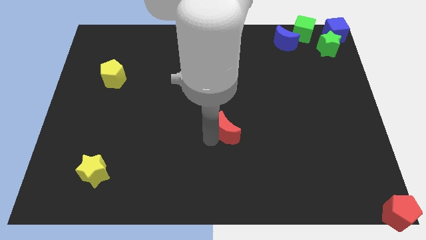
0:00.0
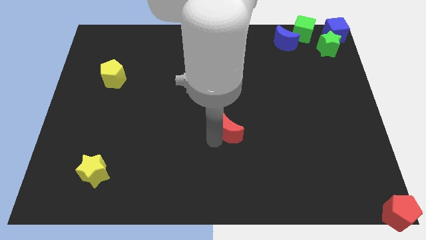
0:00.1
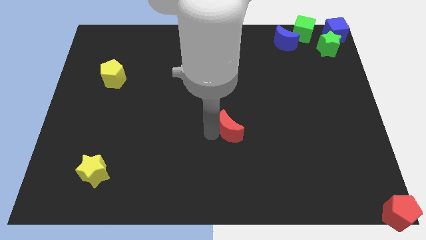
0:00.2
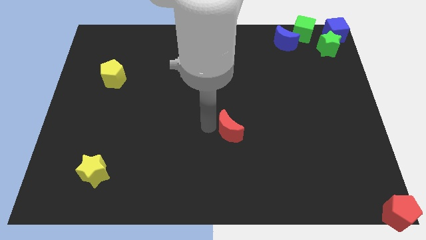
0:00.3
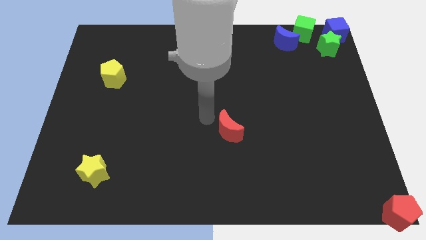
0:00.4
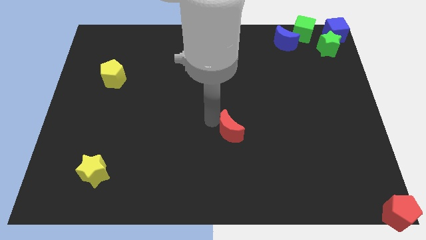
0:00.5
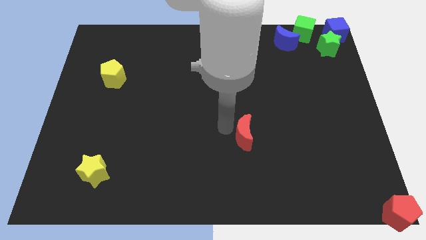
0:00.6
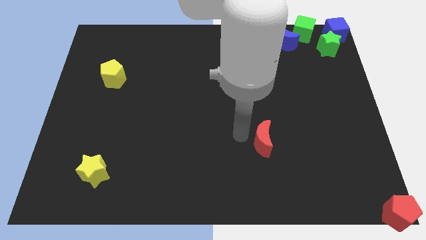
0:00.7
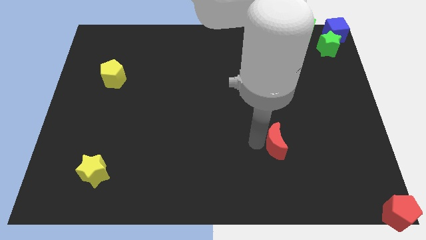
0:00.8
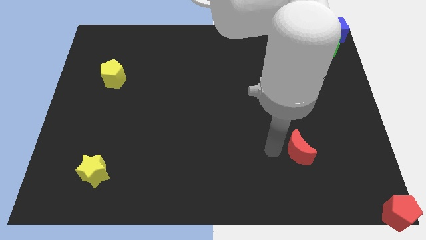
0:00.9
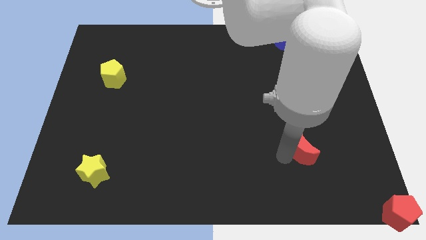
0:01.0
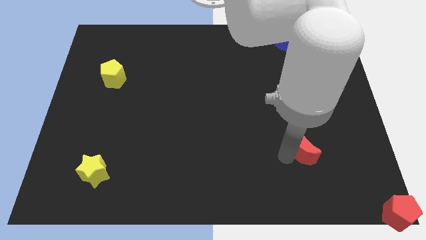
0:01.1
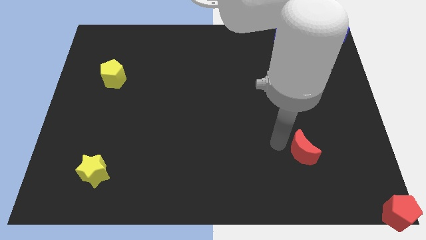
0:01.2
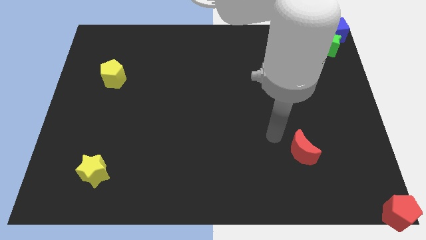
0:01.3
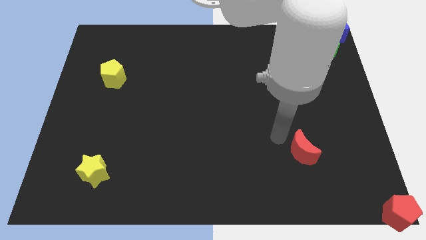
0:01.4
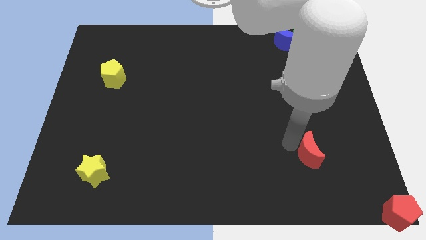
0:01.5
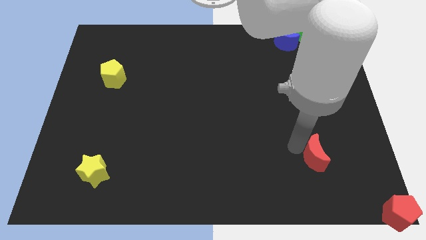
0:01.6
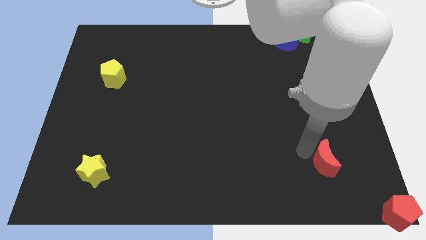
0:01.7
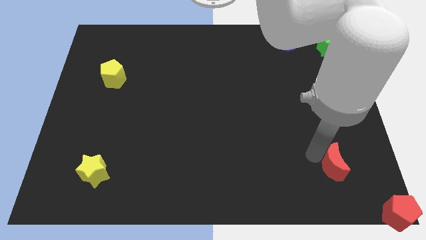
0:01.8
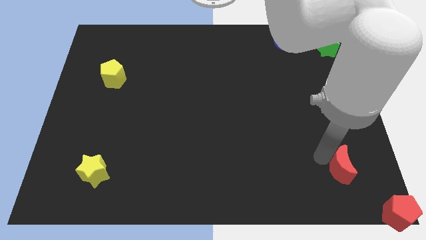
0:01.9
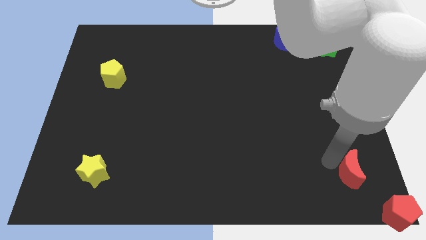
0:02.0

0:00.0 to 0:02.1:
slide the red moon towards the red pentagon

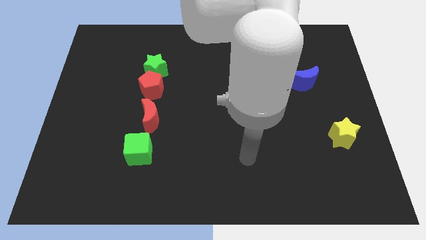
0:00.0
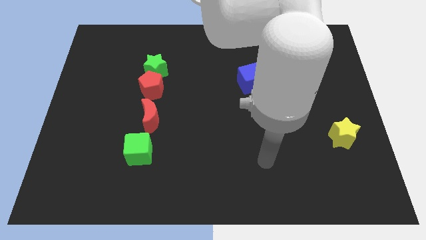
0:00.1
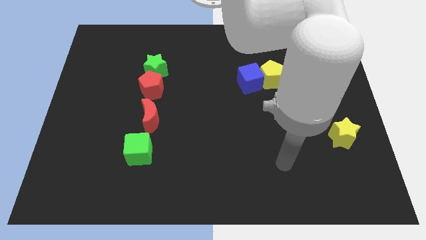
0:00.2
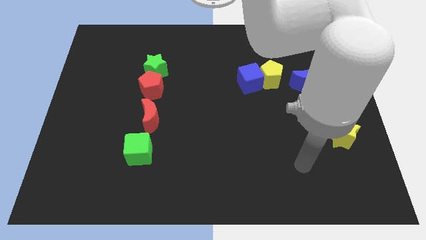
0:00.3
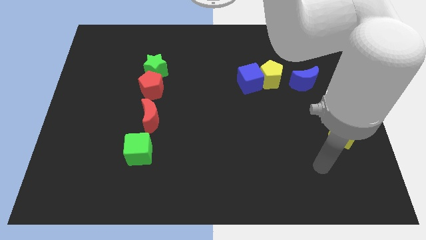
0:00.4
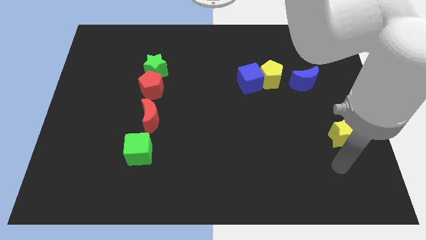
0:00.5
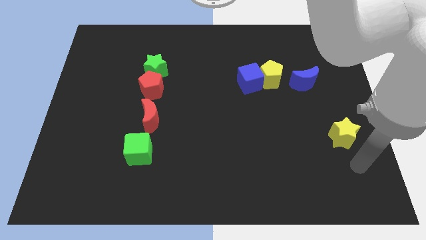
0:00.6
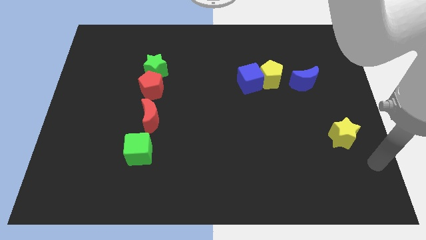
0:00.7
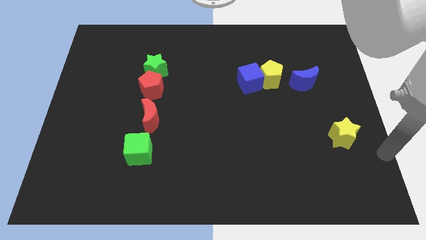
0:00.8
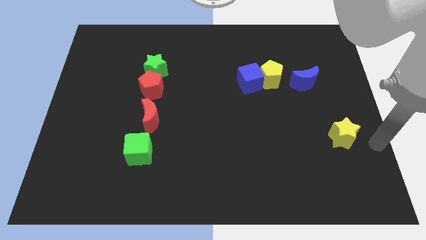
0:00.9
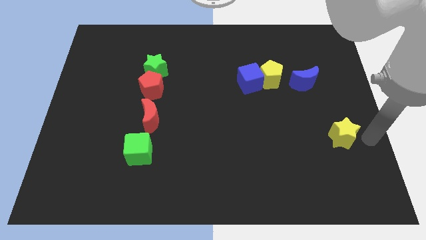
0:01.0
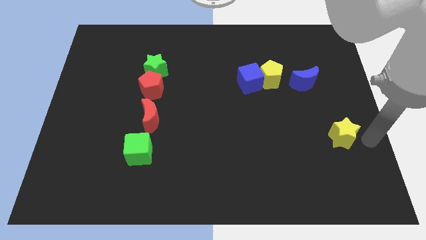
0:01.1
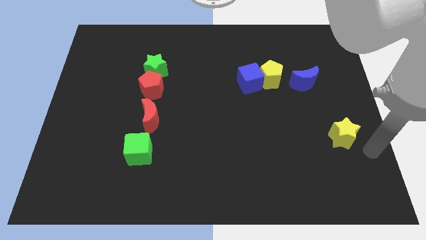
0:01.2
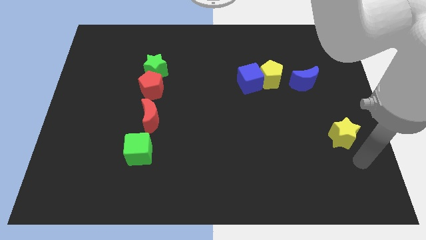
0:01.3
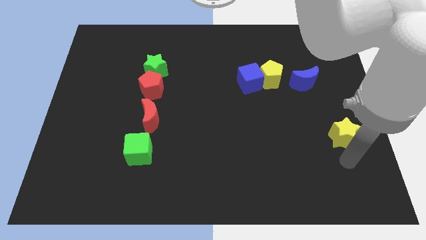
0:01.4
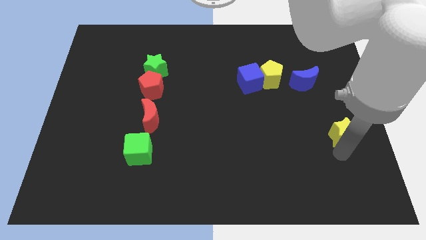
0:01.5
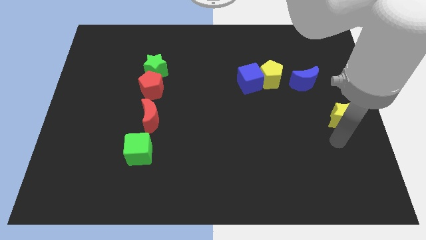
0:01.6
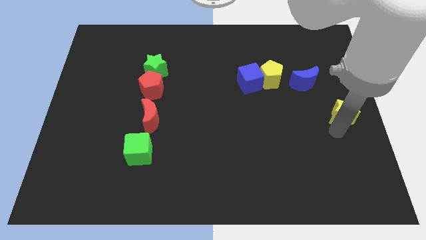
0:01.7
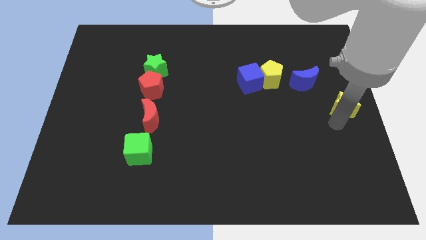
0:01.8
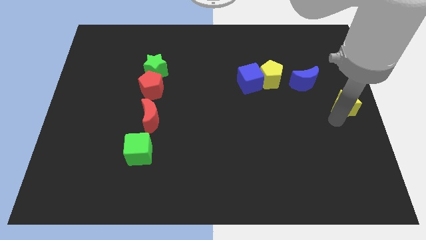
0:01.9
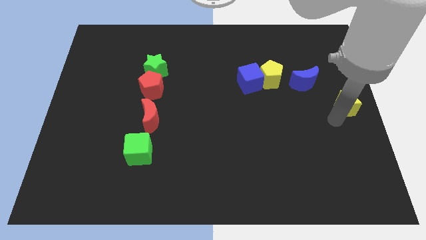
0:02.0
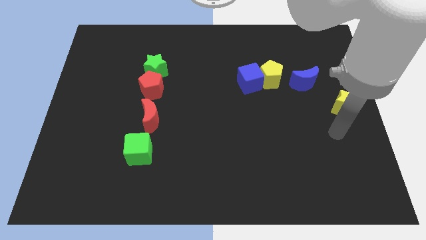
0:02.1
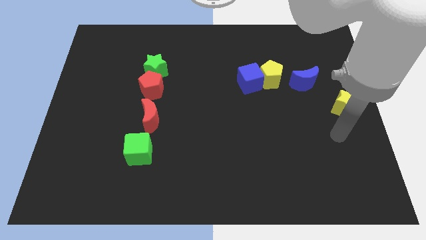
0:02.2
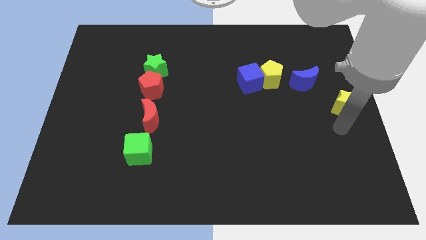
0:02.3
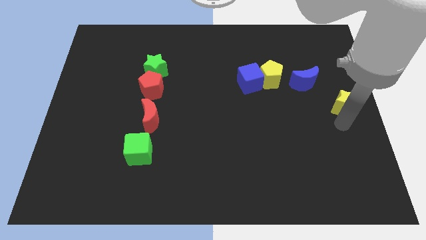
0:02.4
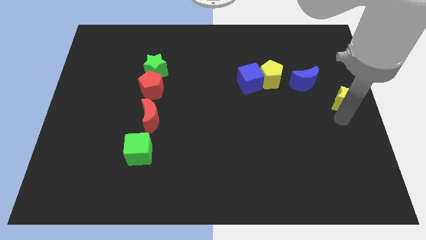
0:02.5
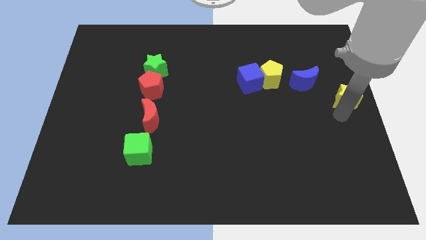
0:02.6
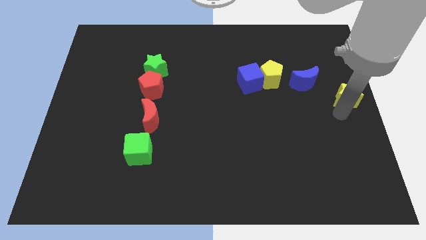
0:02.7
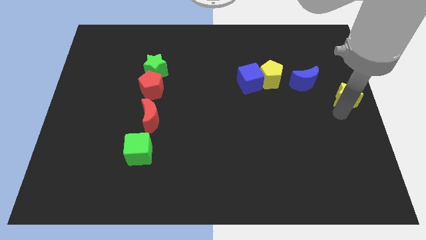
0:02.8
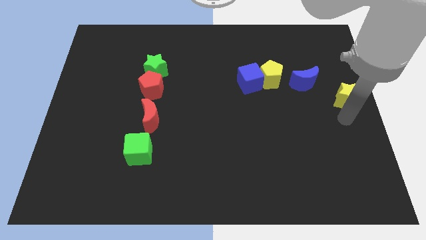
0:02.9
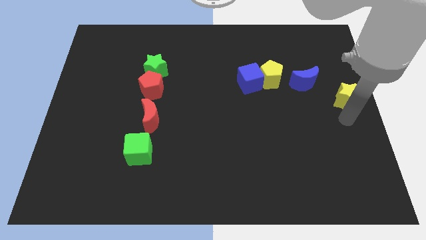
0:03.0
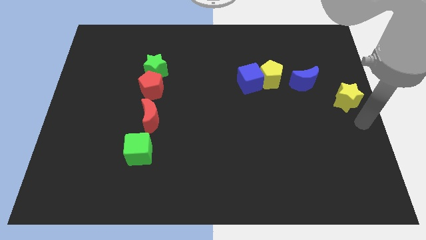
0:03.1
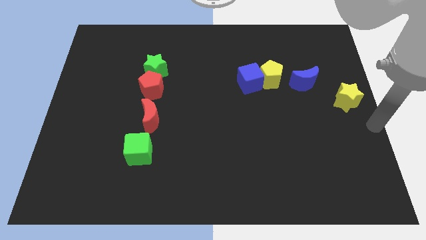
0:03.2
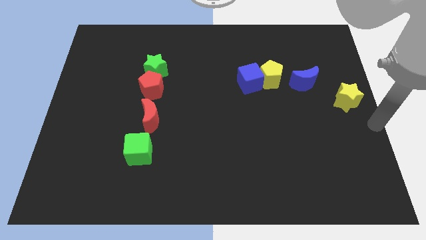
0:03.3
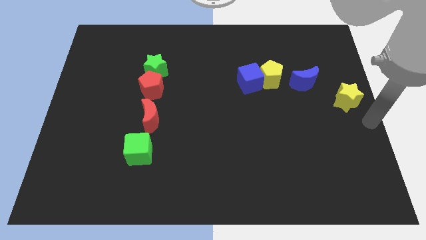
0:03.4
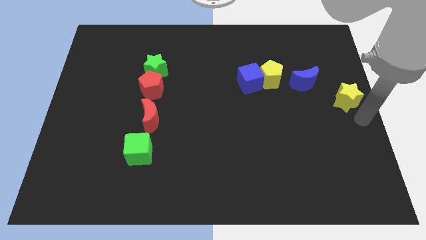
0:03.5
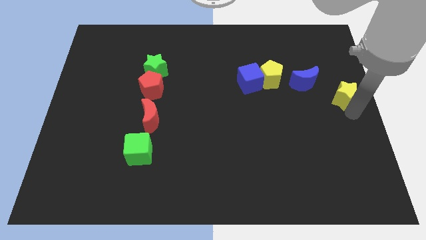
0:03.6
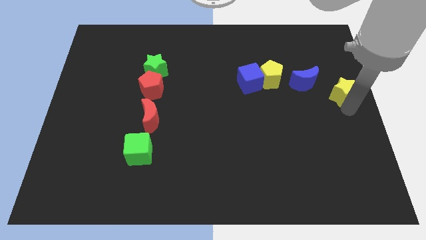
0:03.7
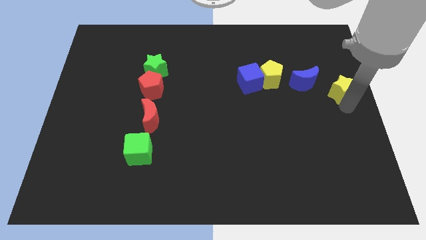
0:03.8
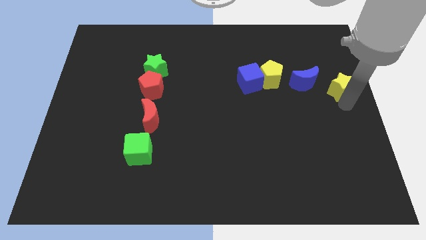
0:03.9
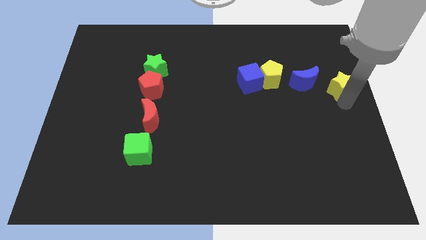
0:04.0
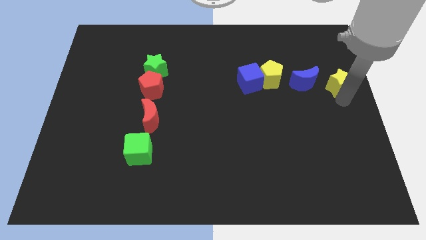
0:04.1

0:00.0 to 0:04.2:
push yellow star to center right of the board

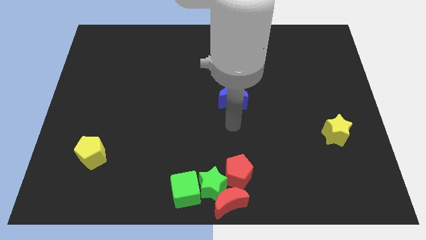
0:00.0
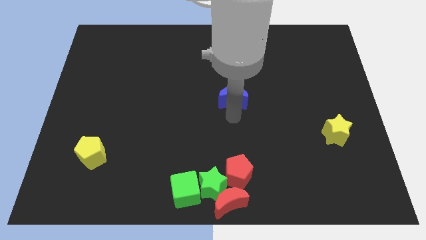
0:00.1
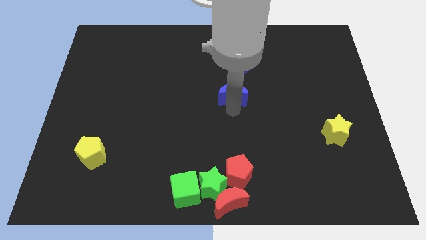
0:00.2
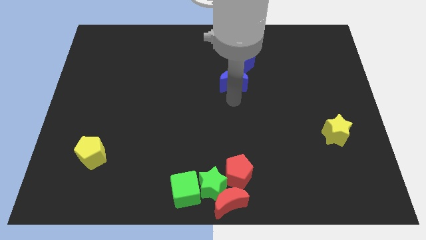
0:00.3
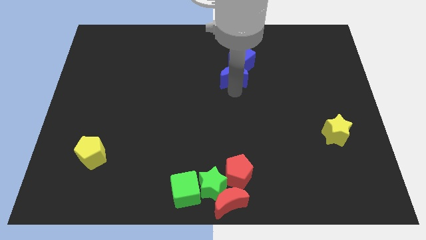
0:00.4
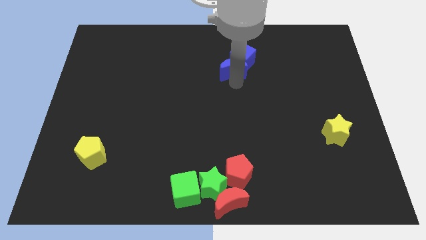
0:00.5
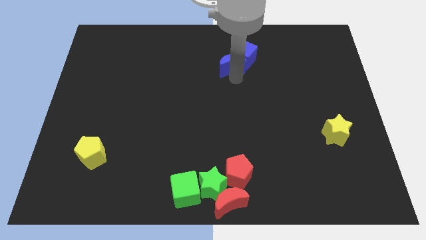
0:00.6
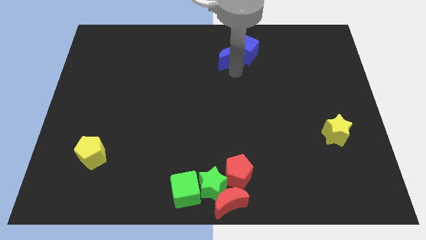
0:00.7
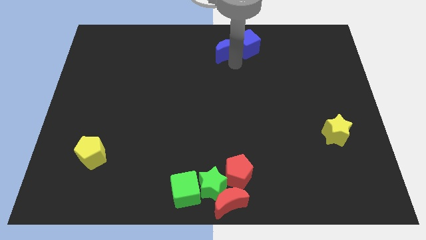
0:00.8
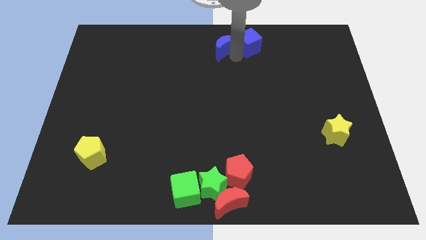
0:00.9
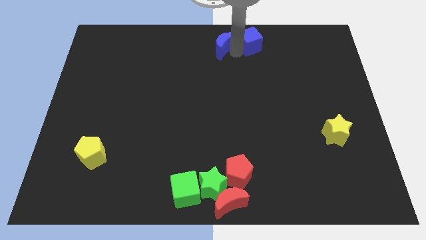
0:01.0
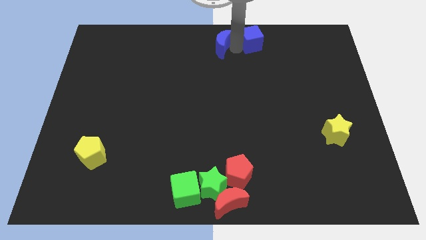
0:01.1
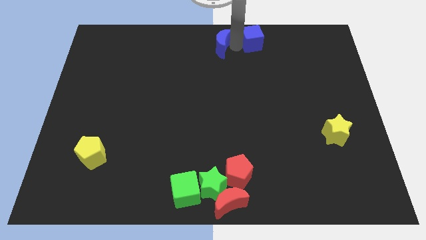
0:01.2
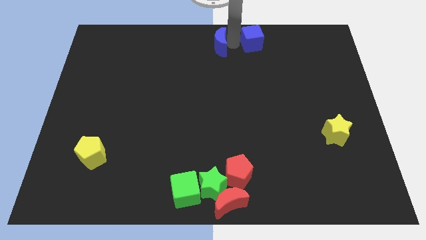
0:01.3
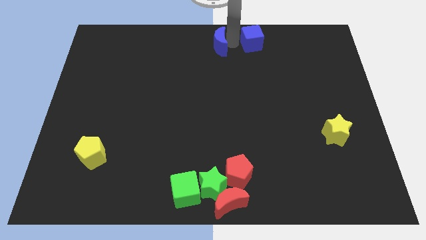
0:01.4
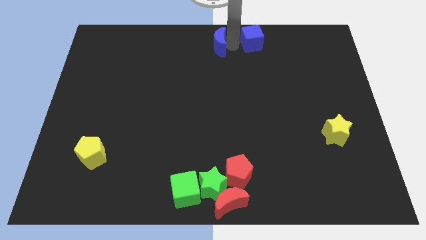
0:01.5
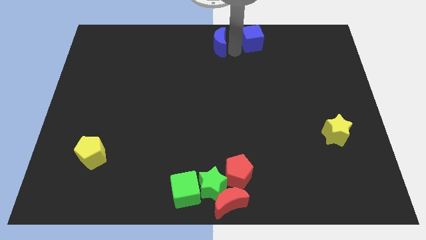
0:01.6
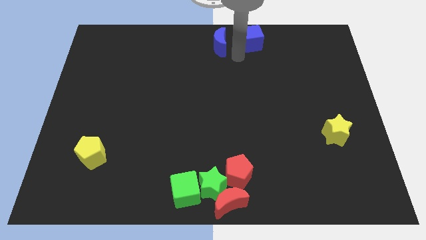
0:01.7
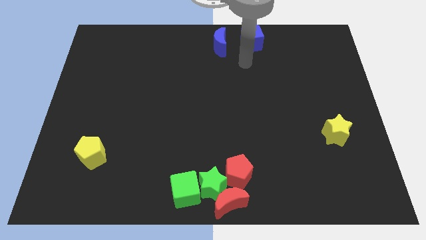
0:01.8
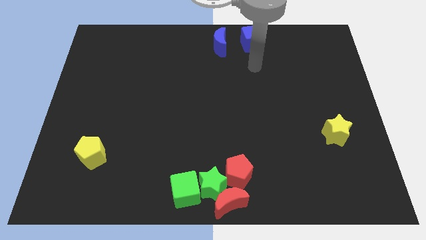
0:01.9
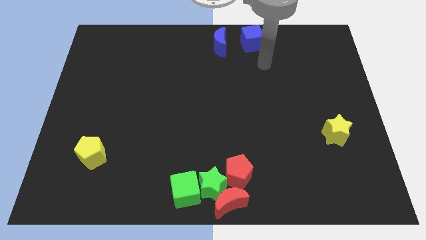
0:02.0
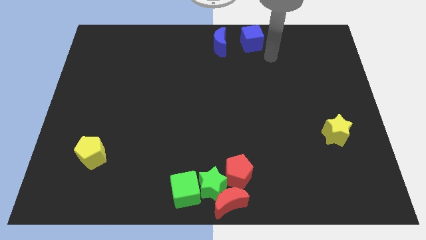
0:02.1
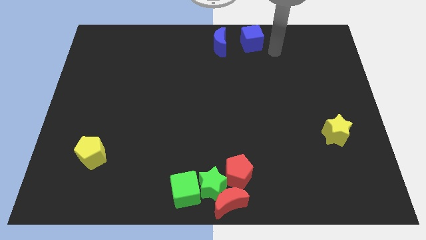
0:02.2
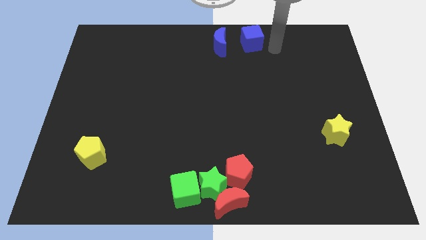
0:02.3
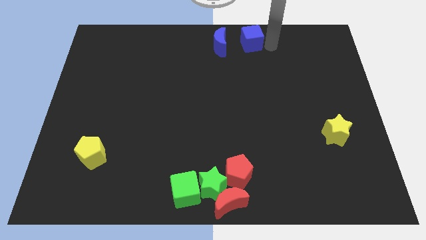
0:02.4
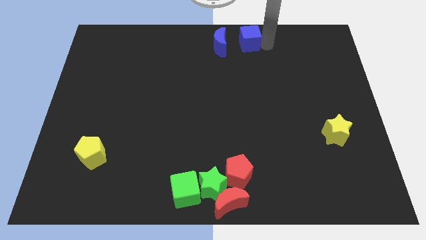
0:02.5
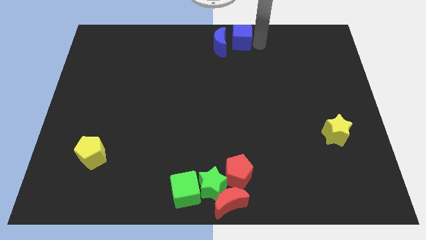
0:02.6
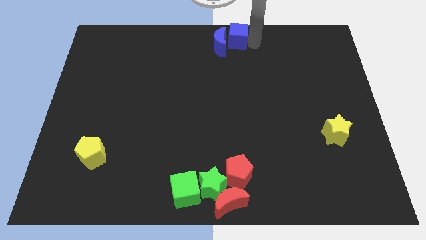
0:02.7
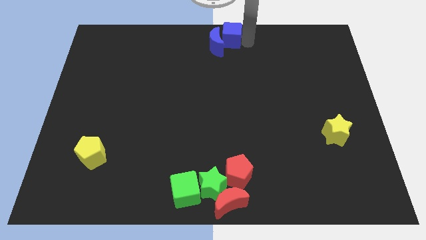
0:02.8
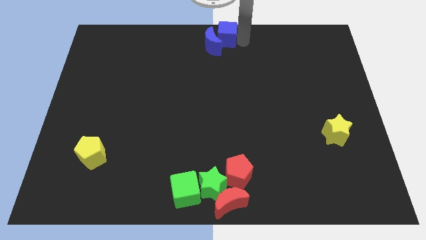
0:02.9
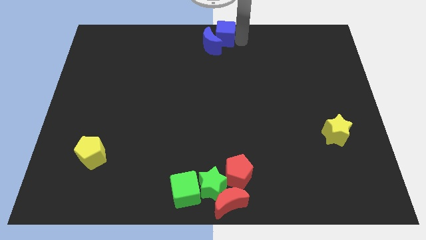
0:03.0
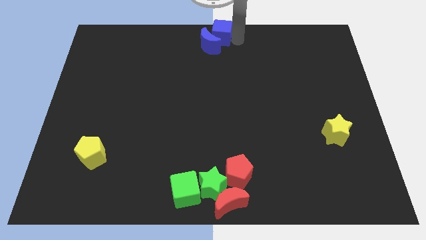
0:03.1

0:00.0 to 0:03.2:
place both the blue blocks at the top center
